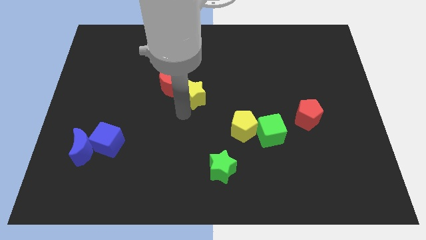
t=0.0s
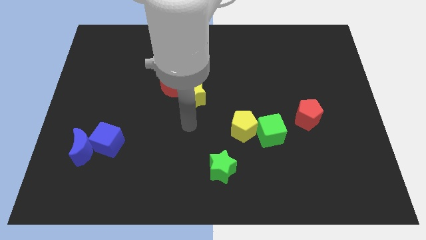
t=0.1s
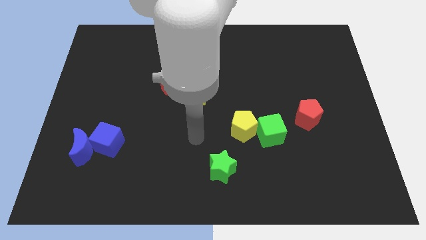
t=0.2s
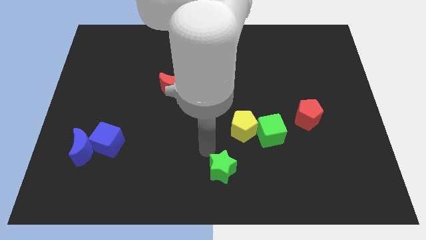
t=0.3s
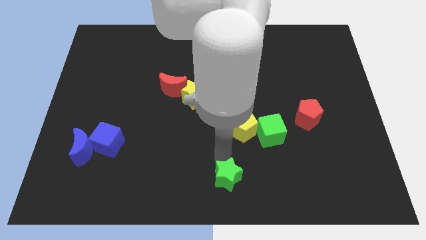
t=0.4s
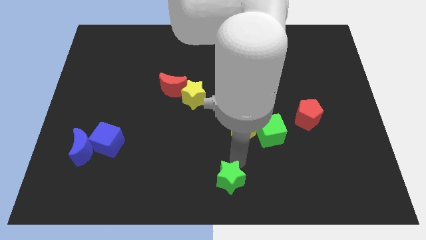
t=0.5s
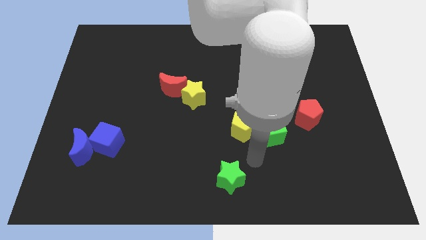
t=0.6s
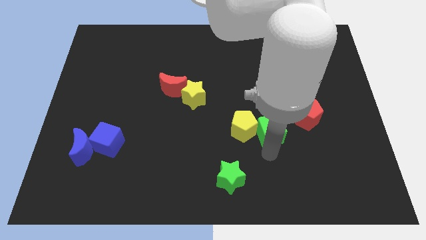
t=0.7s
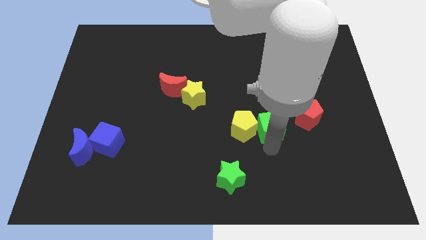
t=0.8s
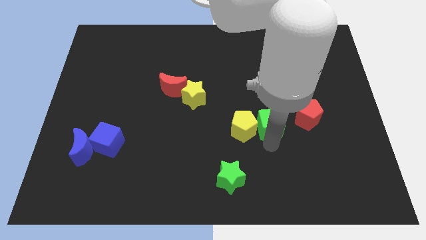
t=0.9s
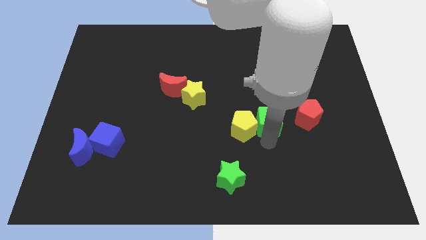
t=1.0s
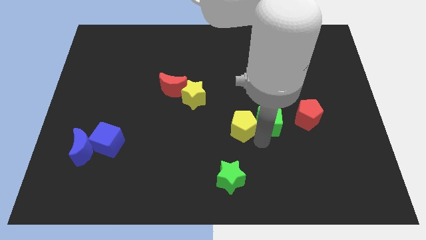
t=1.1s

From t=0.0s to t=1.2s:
place green cube beside yellow pentagon

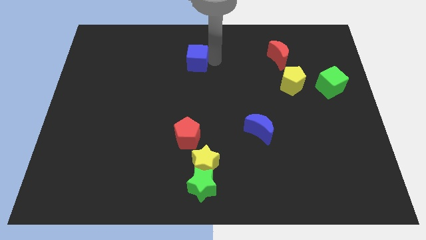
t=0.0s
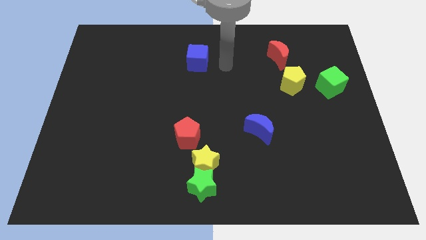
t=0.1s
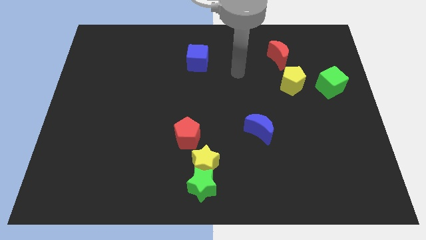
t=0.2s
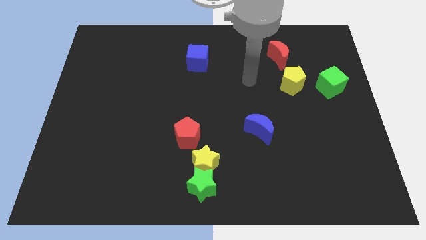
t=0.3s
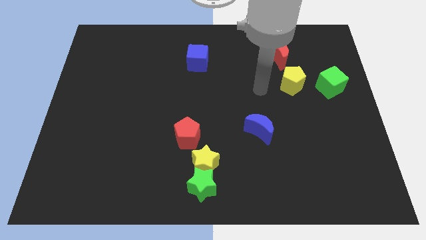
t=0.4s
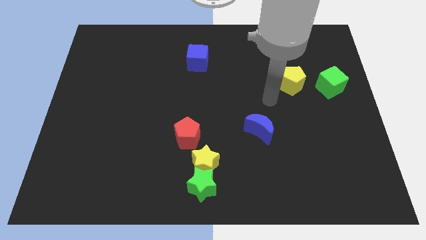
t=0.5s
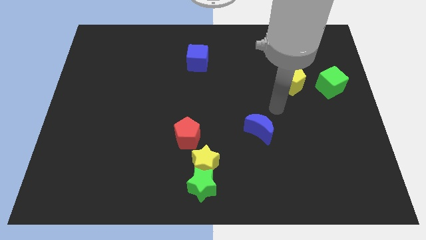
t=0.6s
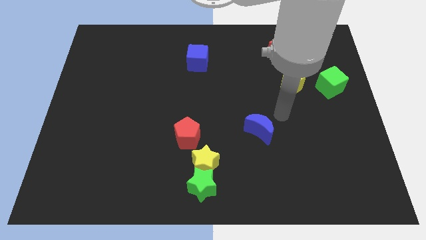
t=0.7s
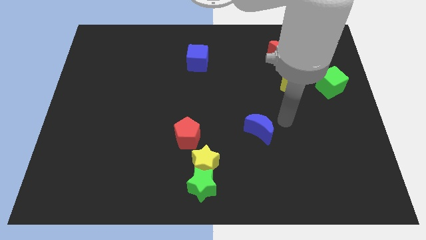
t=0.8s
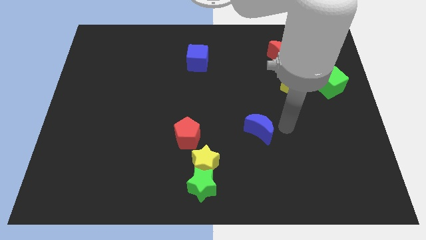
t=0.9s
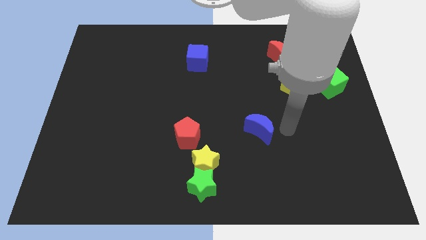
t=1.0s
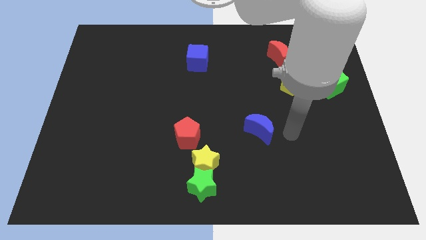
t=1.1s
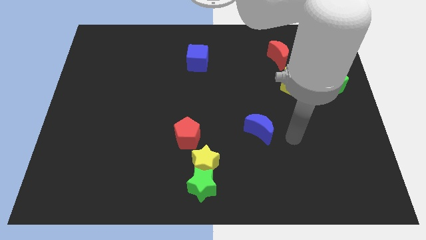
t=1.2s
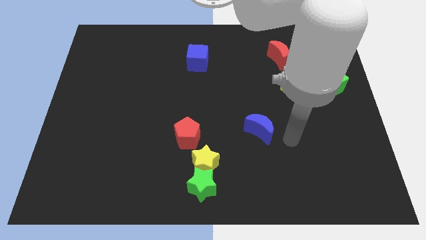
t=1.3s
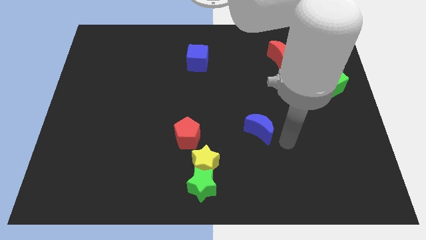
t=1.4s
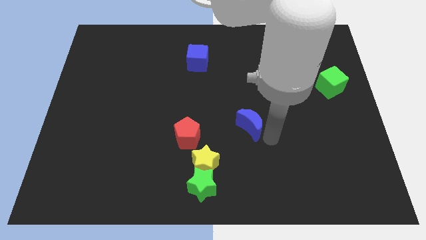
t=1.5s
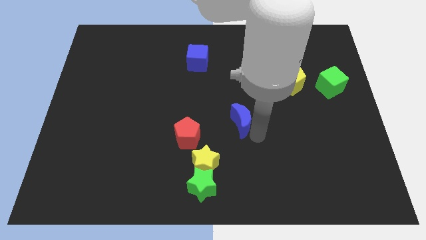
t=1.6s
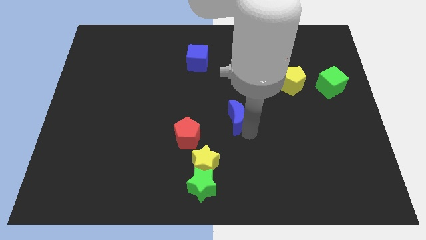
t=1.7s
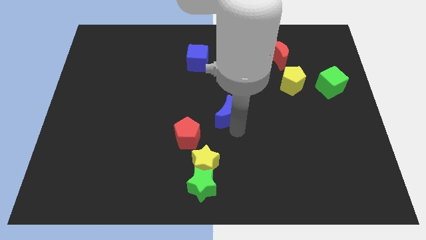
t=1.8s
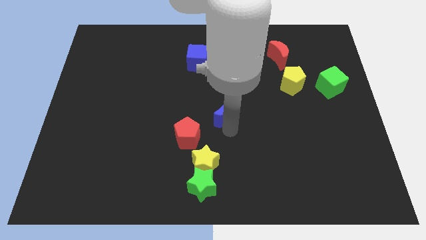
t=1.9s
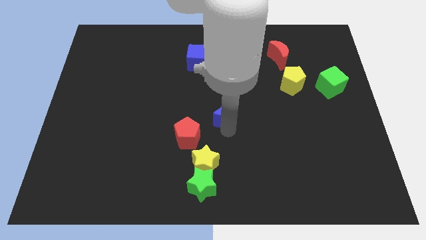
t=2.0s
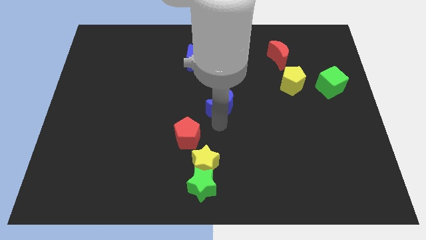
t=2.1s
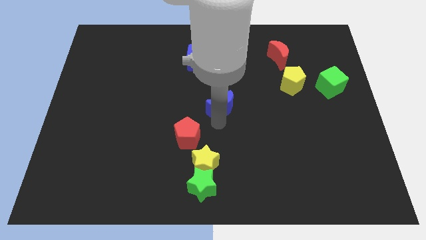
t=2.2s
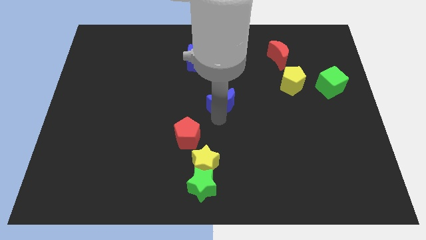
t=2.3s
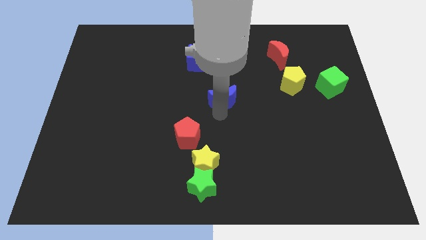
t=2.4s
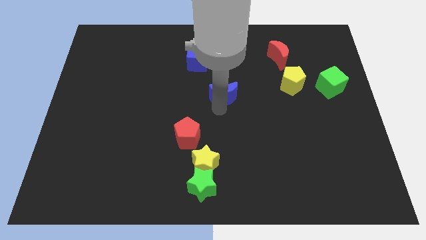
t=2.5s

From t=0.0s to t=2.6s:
push blue crescent beside yellow pentagon

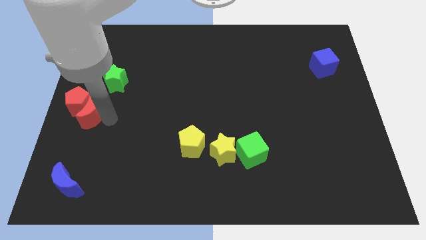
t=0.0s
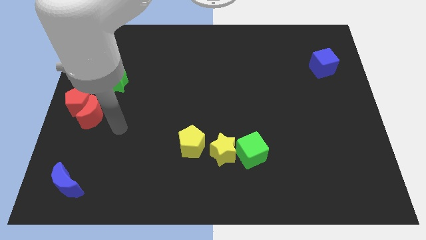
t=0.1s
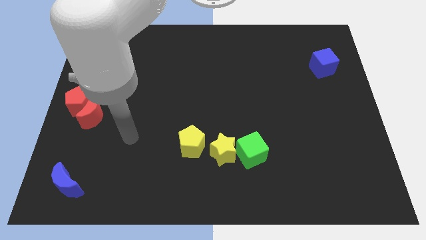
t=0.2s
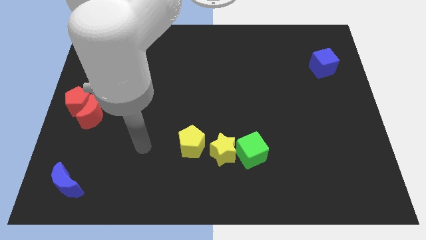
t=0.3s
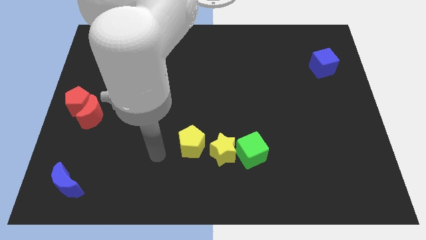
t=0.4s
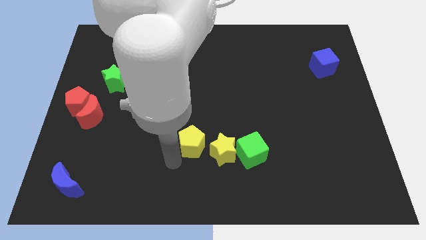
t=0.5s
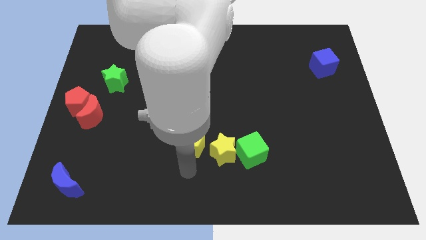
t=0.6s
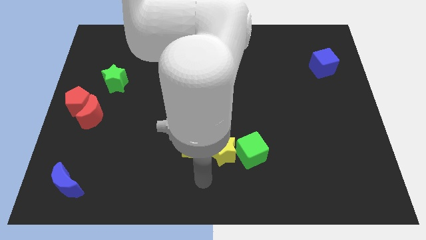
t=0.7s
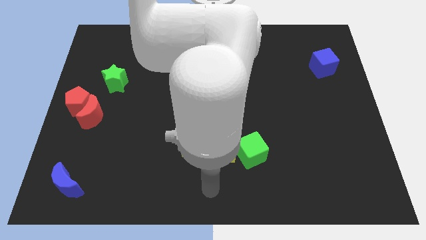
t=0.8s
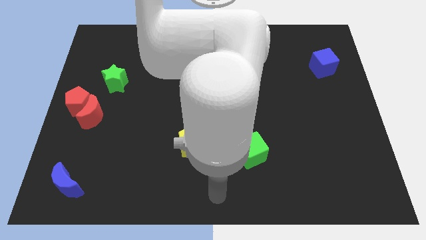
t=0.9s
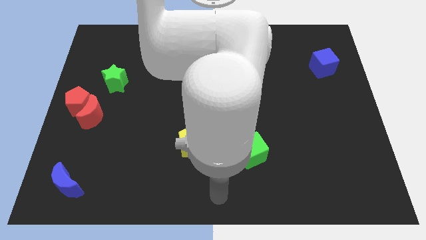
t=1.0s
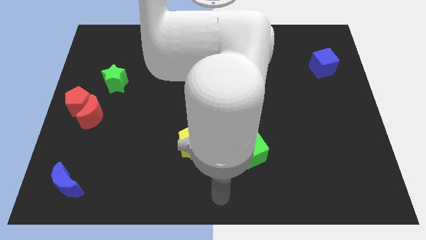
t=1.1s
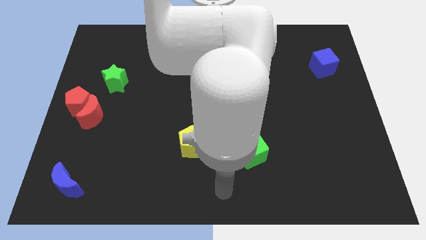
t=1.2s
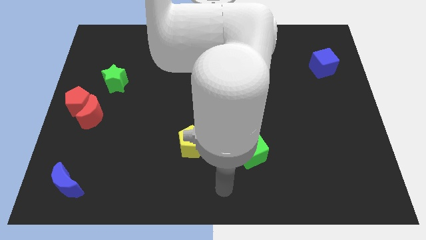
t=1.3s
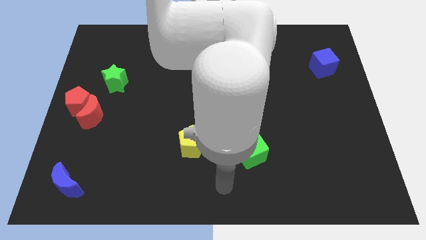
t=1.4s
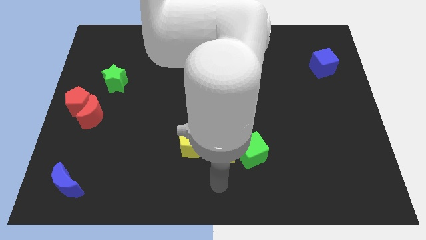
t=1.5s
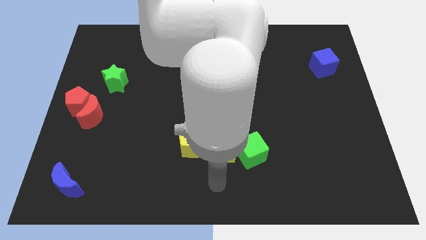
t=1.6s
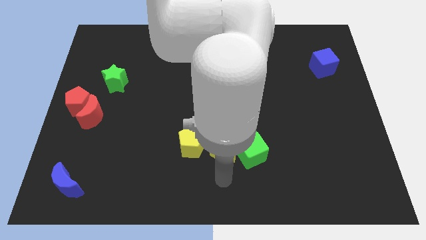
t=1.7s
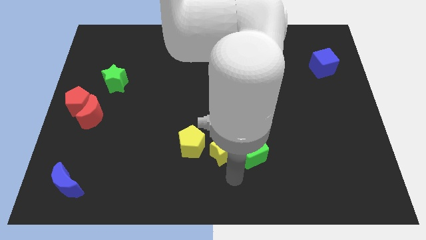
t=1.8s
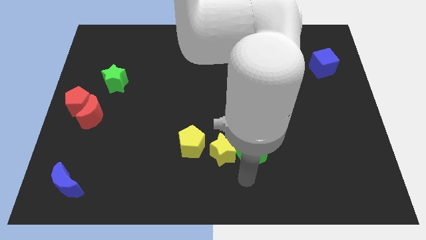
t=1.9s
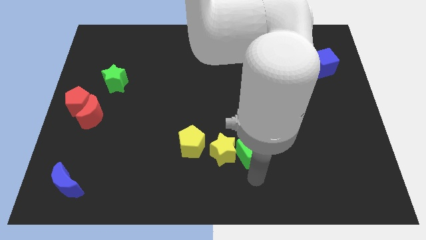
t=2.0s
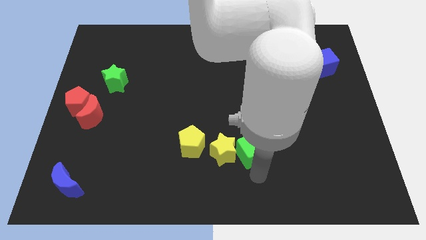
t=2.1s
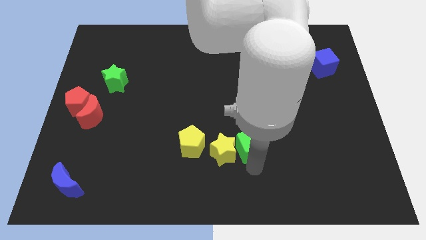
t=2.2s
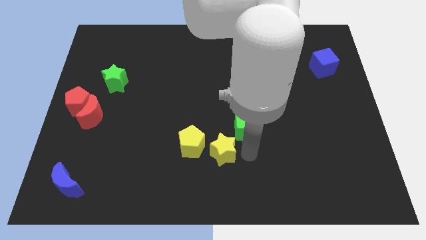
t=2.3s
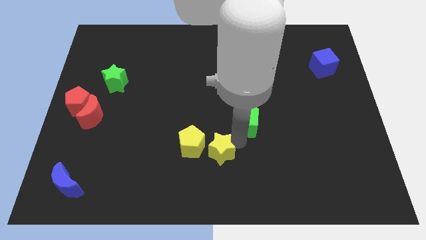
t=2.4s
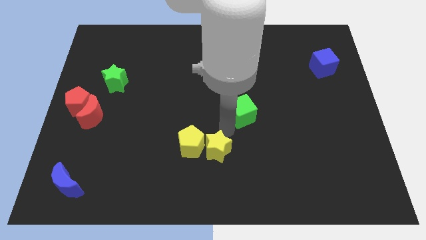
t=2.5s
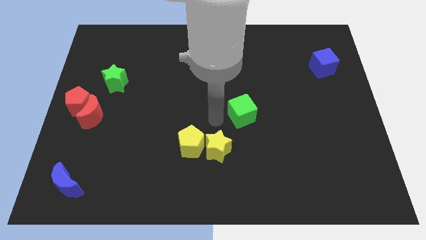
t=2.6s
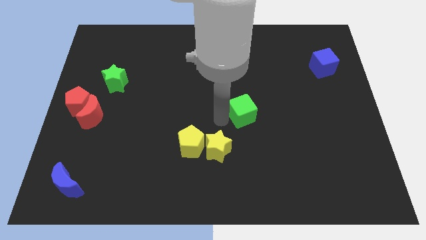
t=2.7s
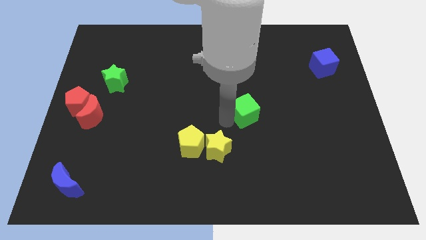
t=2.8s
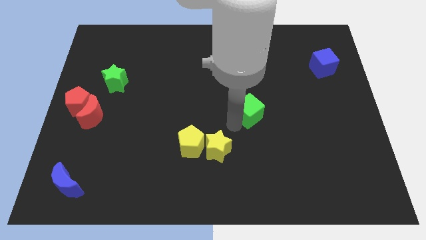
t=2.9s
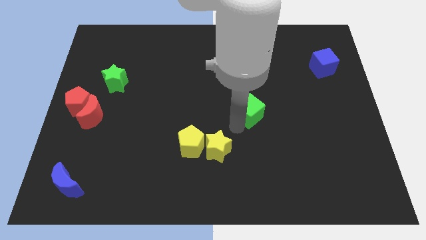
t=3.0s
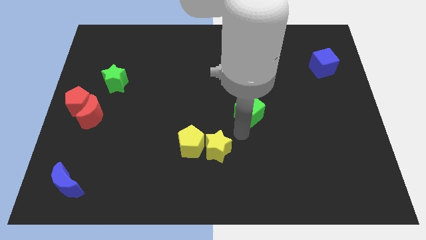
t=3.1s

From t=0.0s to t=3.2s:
separate the green cube from yellow star

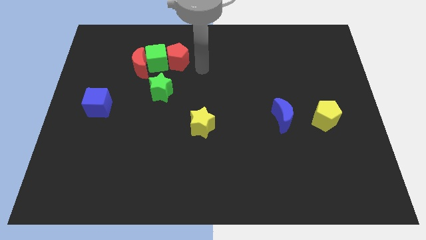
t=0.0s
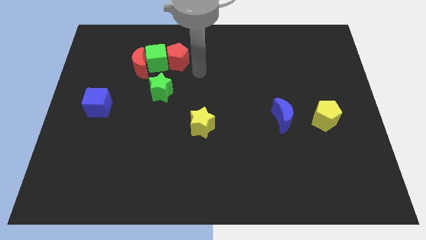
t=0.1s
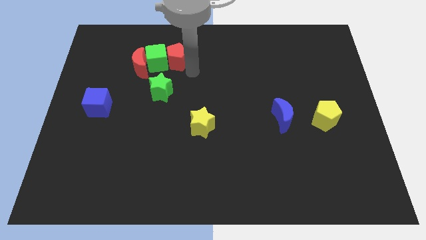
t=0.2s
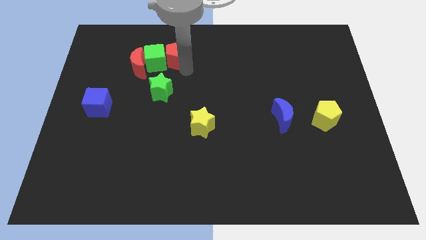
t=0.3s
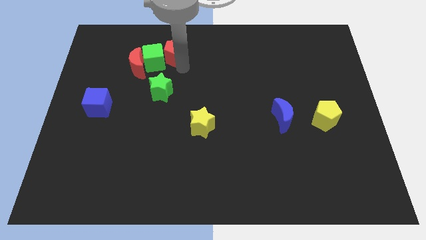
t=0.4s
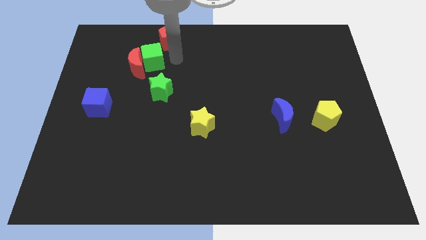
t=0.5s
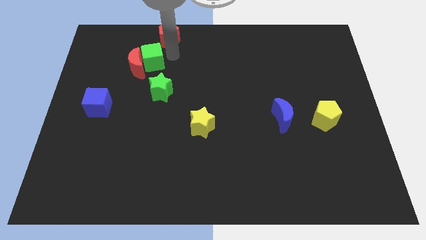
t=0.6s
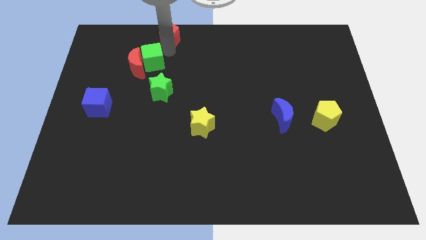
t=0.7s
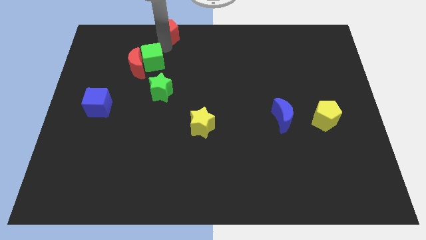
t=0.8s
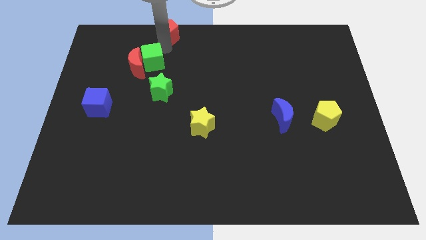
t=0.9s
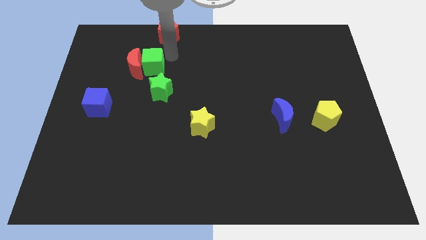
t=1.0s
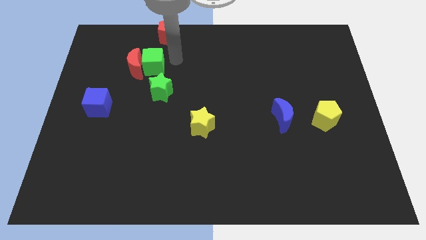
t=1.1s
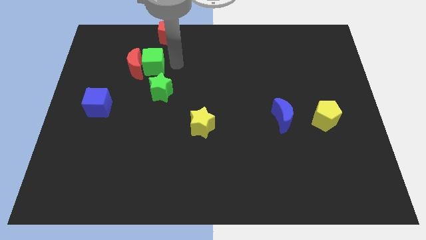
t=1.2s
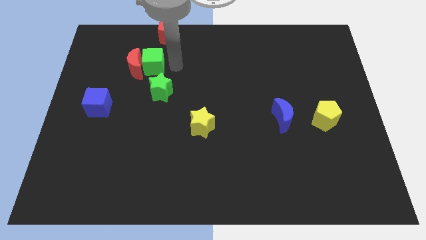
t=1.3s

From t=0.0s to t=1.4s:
push the red pentagon diagonally top right to the green cube

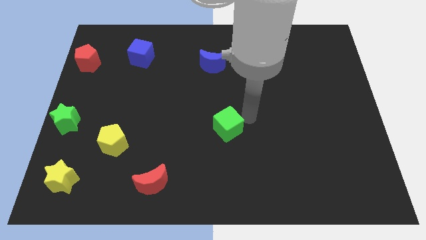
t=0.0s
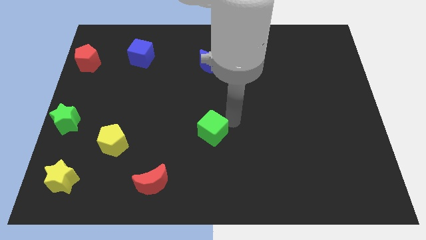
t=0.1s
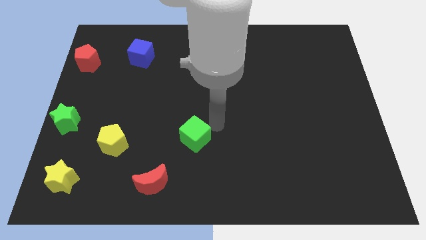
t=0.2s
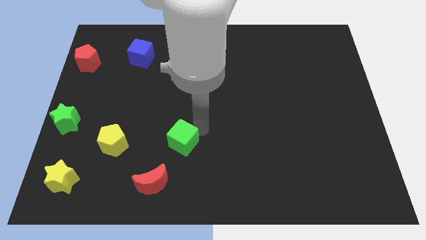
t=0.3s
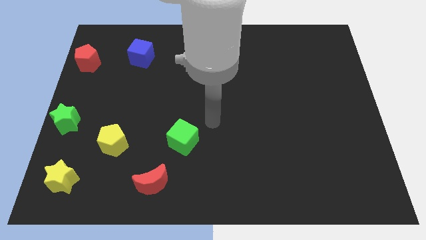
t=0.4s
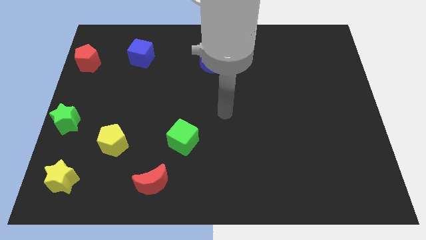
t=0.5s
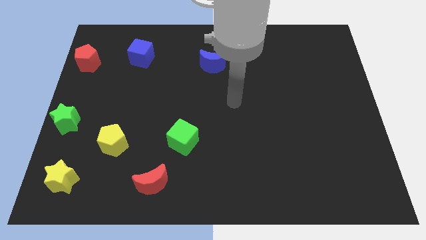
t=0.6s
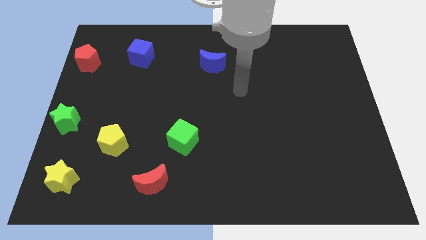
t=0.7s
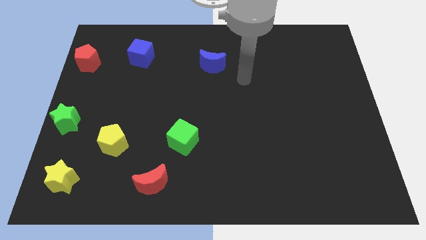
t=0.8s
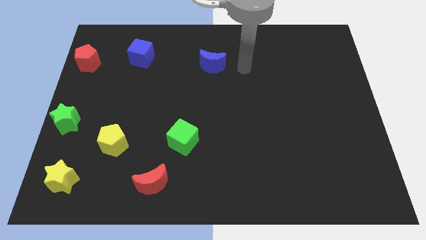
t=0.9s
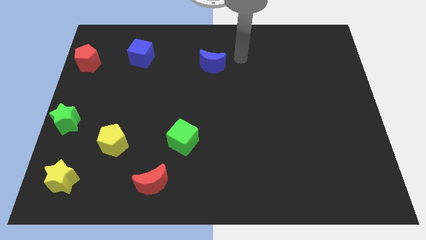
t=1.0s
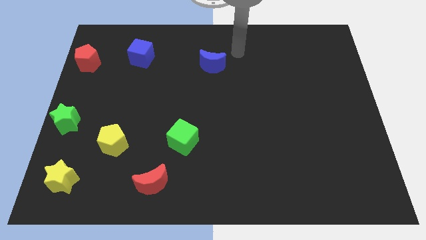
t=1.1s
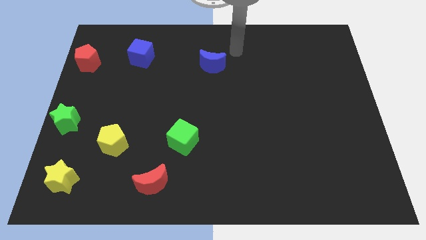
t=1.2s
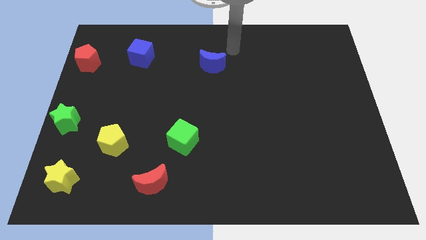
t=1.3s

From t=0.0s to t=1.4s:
place the green cube to the right of the yellow pentagon
